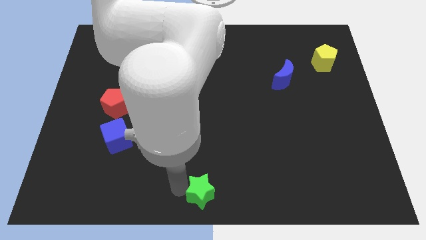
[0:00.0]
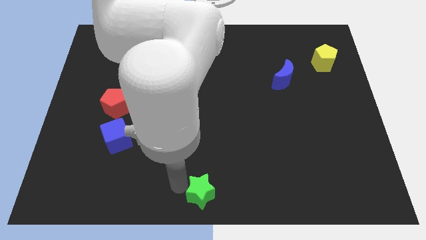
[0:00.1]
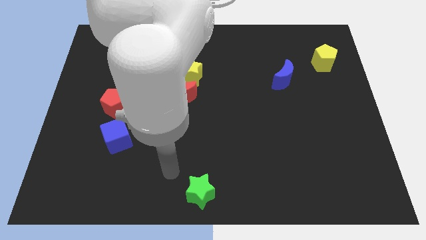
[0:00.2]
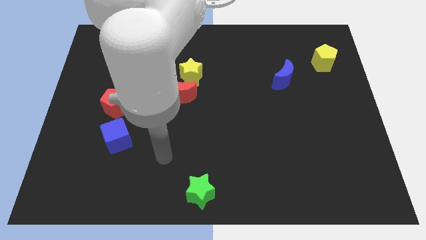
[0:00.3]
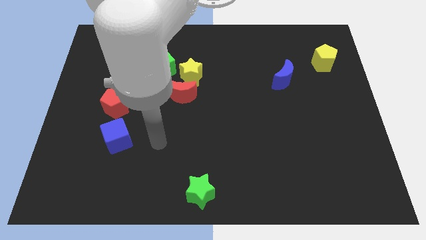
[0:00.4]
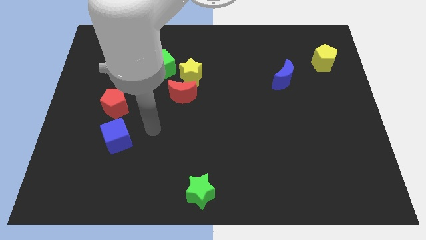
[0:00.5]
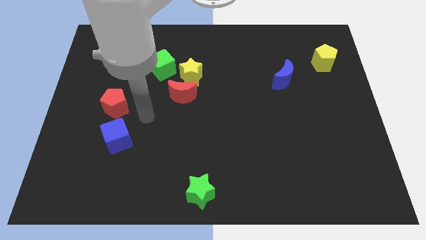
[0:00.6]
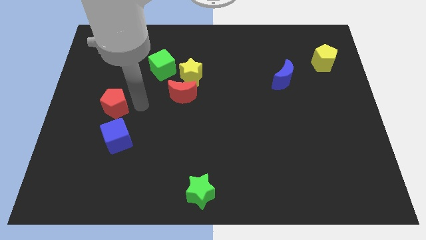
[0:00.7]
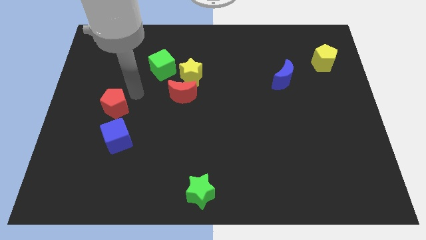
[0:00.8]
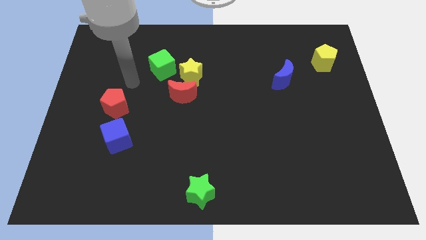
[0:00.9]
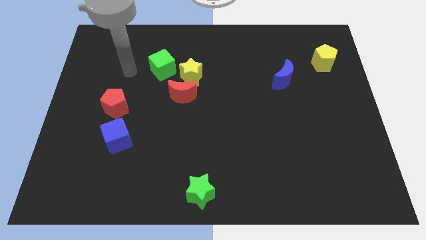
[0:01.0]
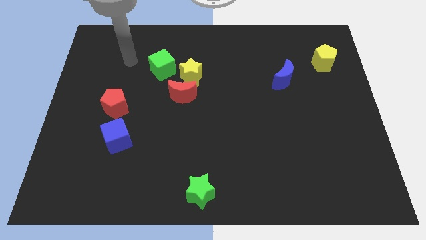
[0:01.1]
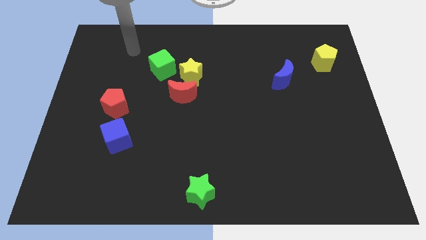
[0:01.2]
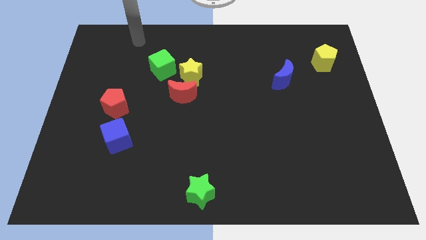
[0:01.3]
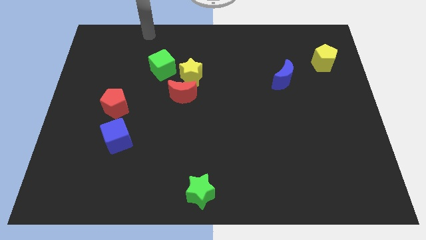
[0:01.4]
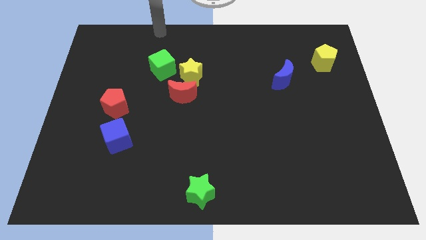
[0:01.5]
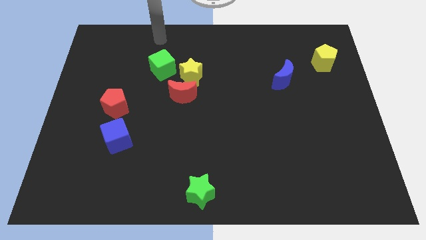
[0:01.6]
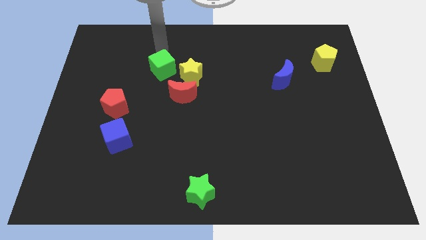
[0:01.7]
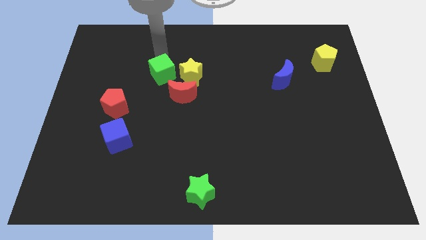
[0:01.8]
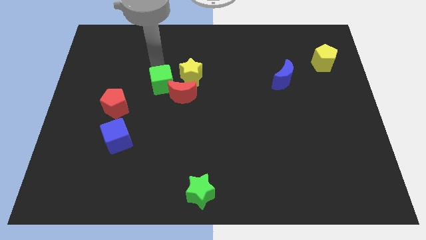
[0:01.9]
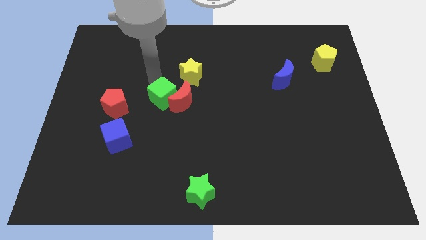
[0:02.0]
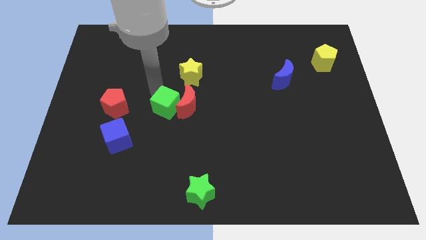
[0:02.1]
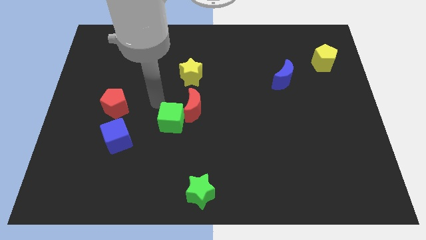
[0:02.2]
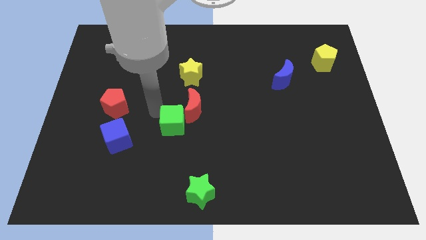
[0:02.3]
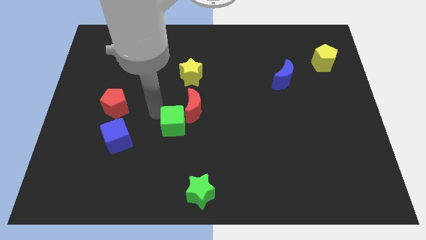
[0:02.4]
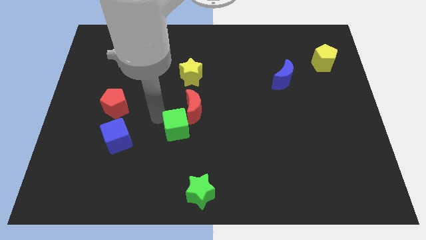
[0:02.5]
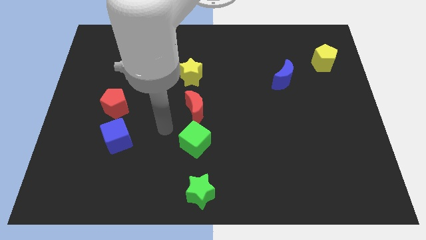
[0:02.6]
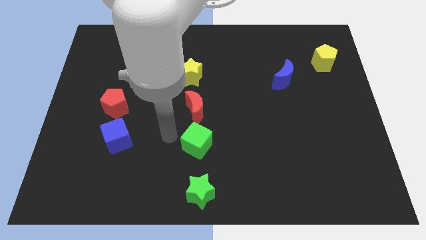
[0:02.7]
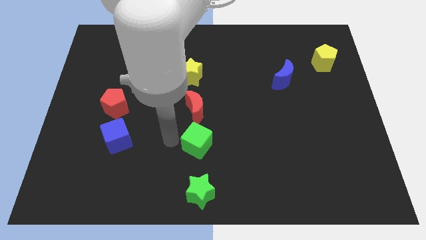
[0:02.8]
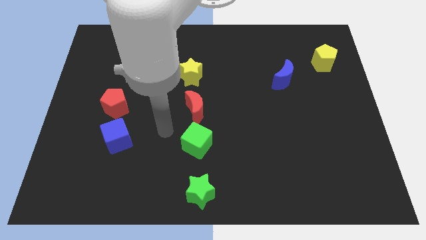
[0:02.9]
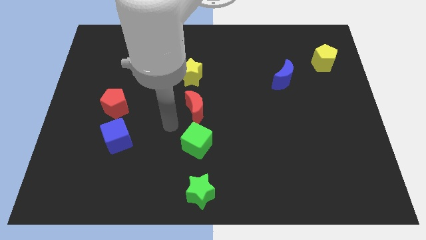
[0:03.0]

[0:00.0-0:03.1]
place the green cube in between the red moon and green star

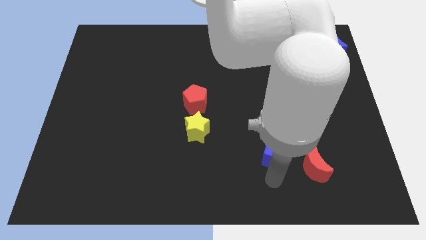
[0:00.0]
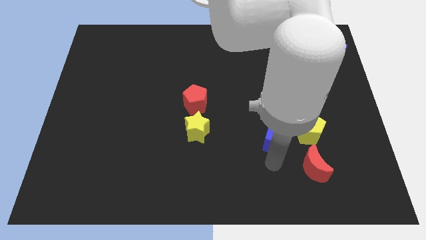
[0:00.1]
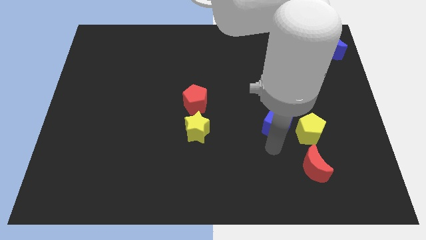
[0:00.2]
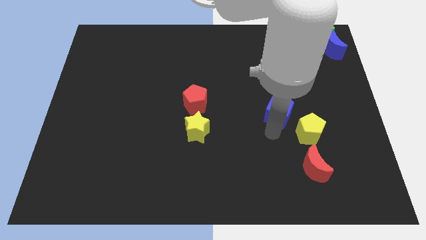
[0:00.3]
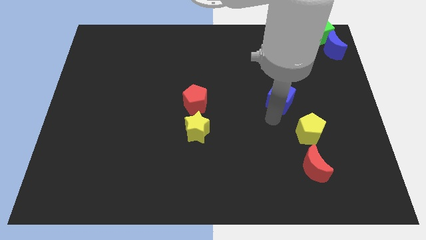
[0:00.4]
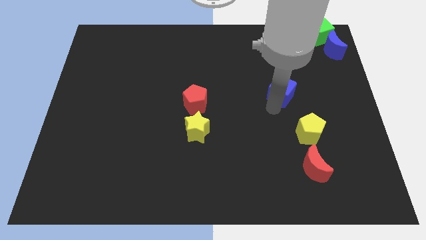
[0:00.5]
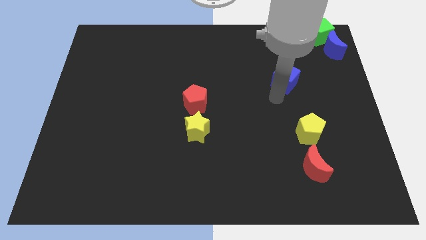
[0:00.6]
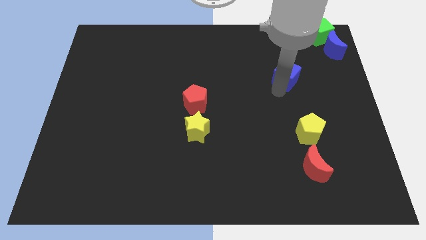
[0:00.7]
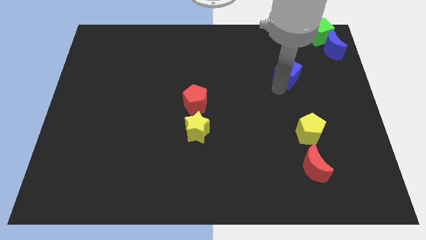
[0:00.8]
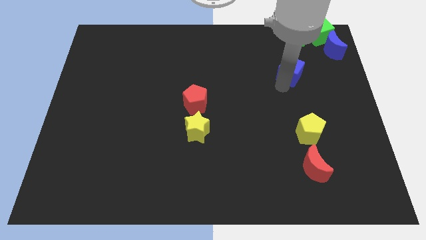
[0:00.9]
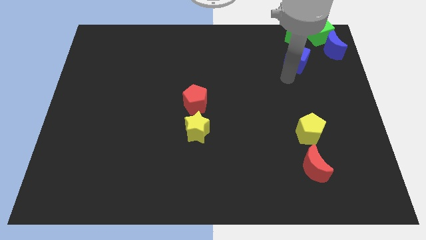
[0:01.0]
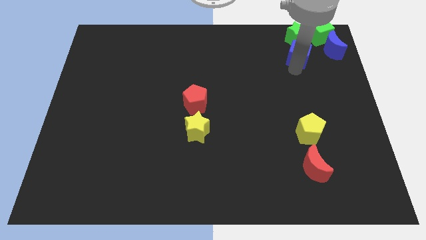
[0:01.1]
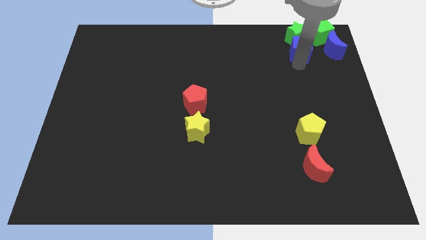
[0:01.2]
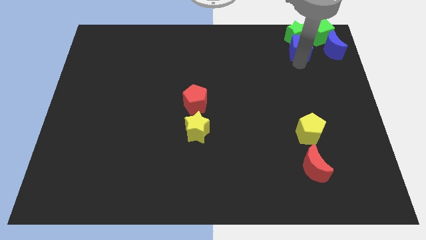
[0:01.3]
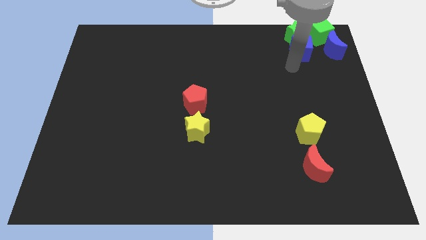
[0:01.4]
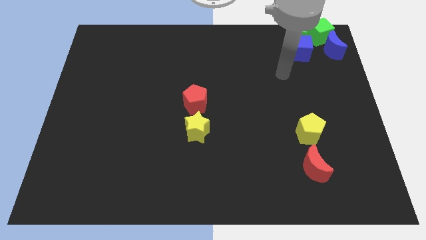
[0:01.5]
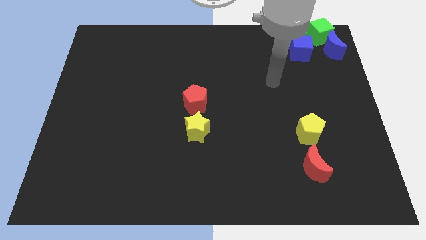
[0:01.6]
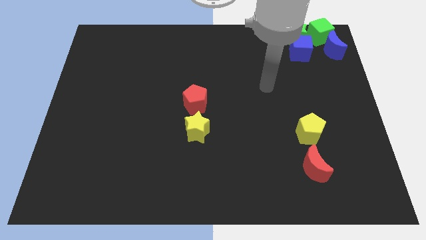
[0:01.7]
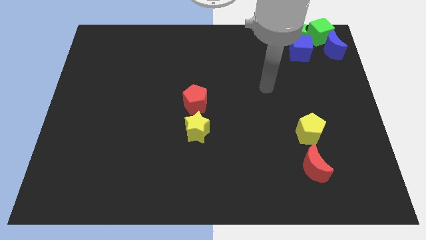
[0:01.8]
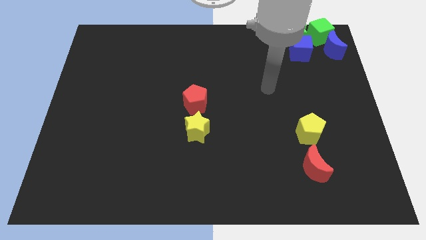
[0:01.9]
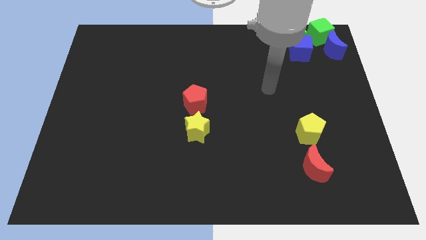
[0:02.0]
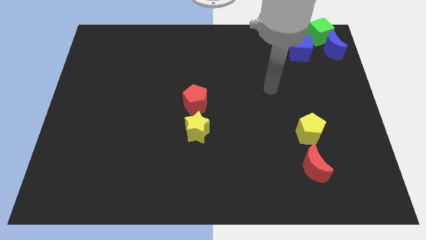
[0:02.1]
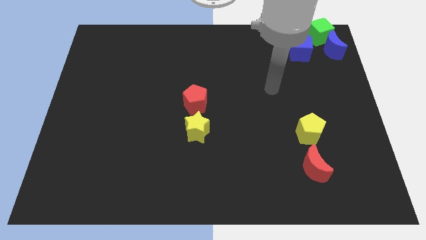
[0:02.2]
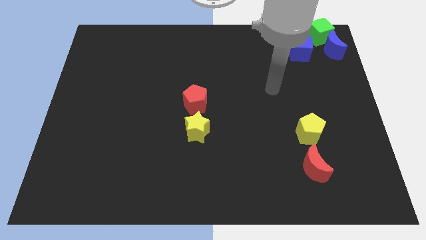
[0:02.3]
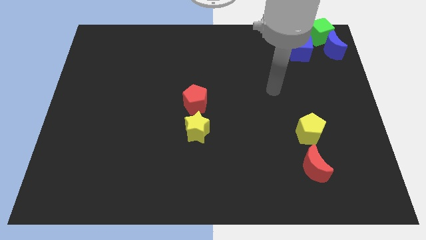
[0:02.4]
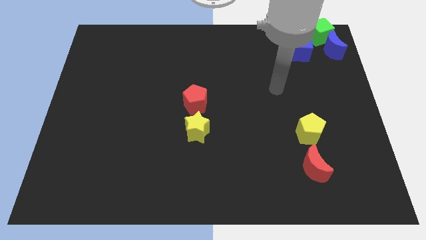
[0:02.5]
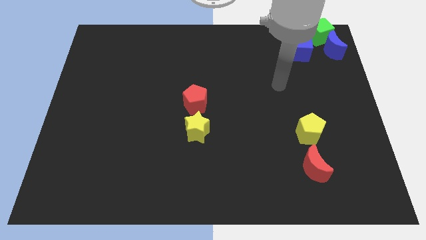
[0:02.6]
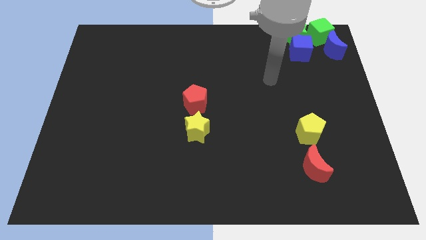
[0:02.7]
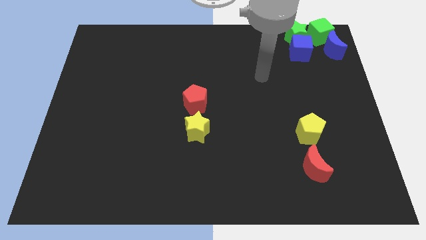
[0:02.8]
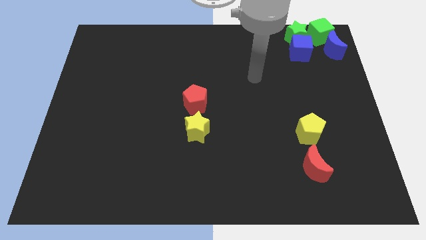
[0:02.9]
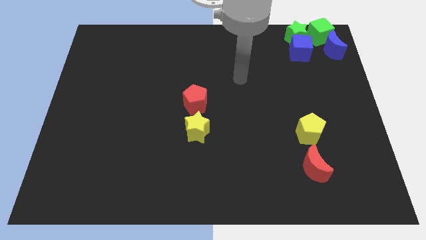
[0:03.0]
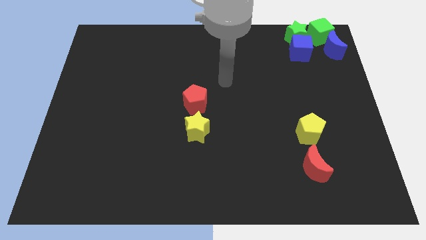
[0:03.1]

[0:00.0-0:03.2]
push the blue cube into the green star

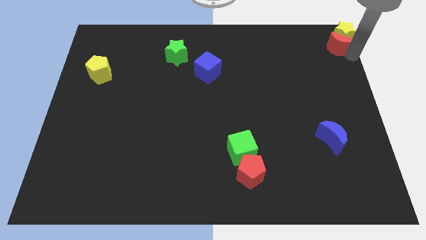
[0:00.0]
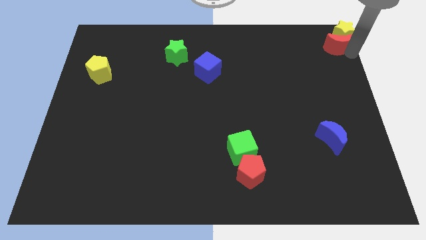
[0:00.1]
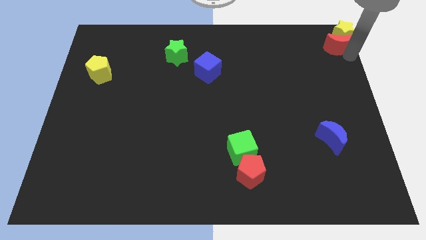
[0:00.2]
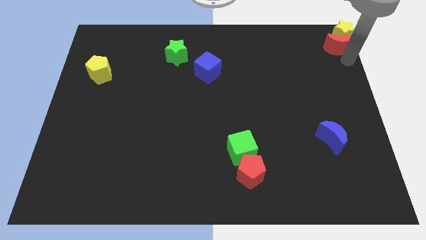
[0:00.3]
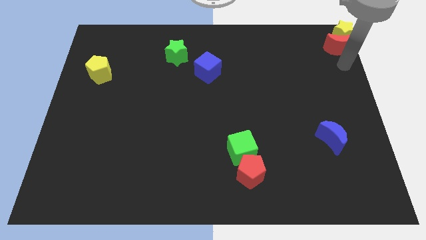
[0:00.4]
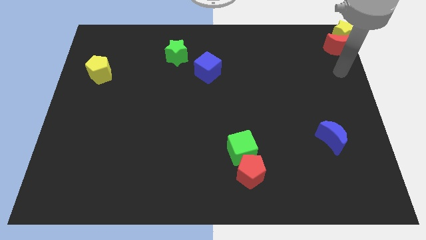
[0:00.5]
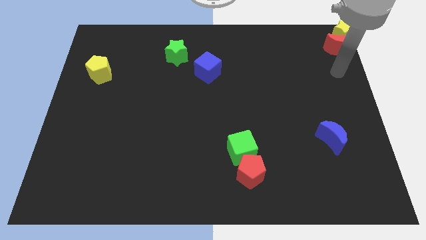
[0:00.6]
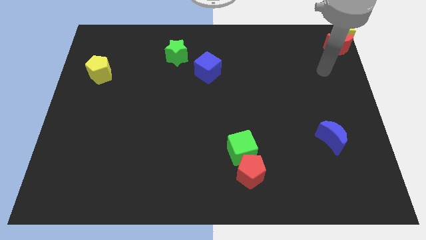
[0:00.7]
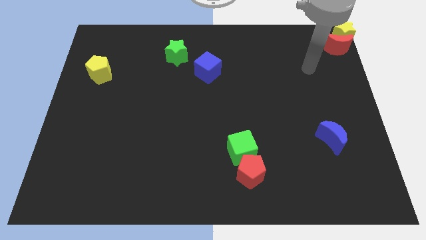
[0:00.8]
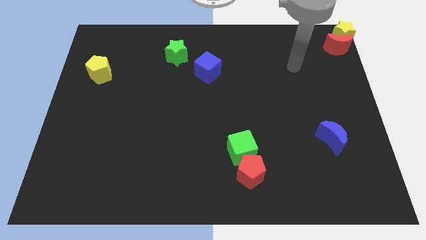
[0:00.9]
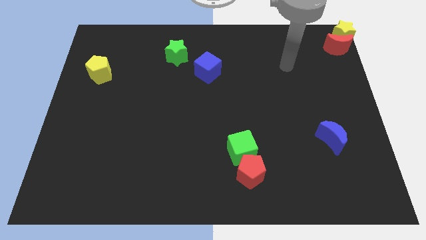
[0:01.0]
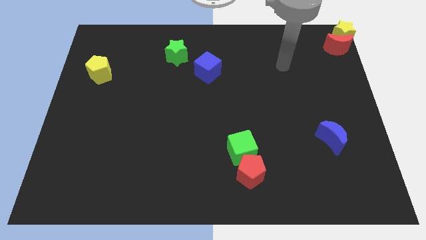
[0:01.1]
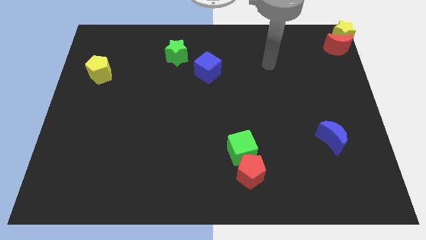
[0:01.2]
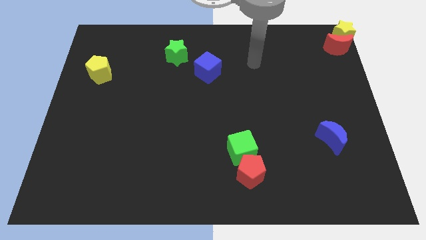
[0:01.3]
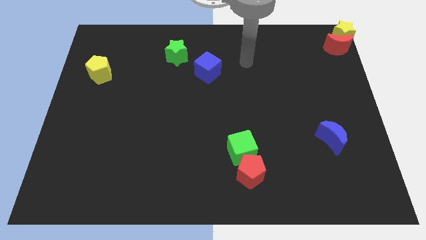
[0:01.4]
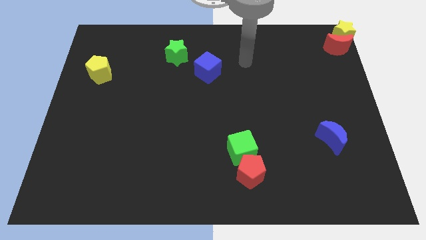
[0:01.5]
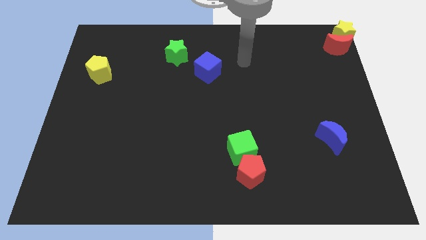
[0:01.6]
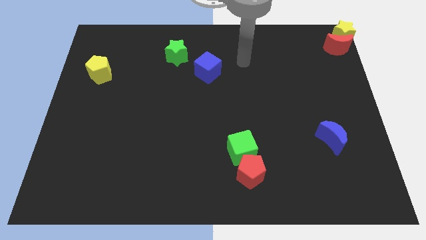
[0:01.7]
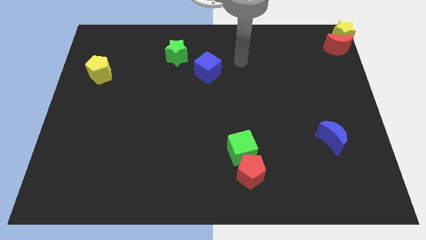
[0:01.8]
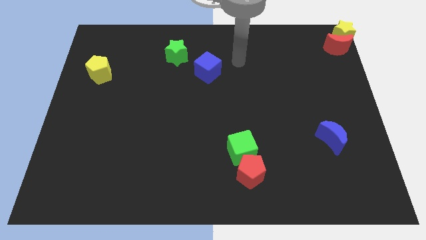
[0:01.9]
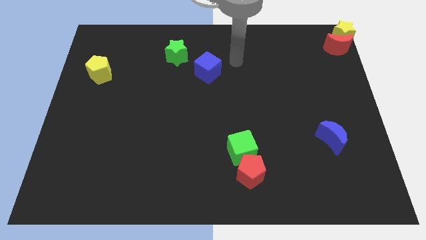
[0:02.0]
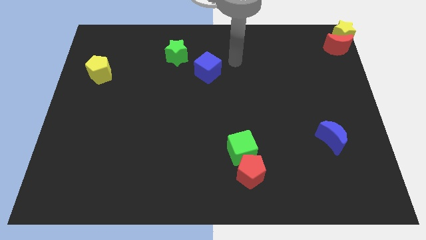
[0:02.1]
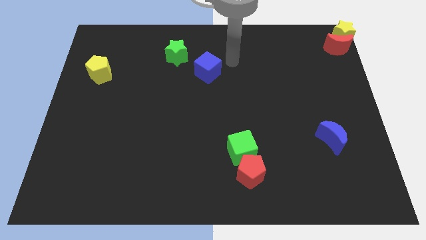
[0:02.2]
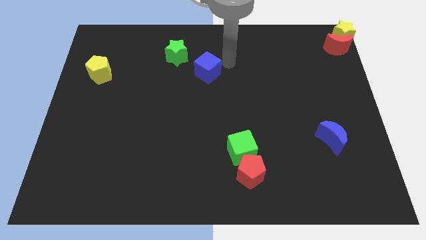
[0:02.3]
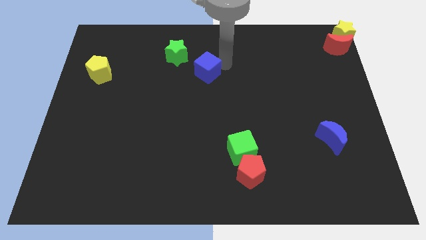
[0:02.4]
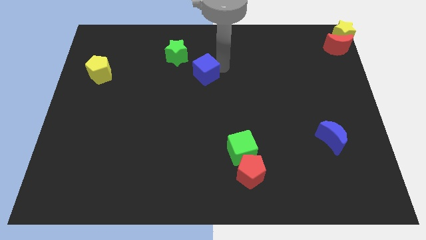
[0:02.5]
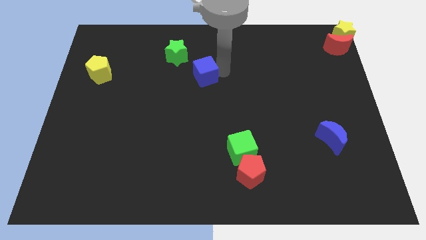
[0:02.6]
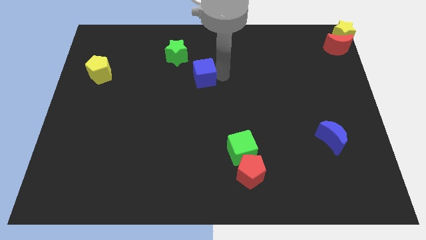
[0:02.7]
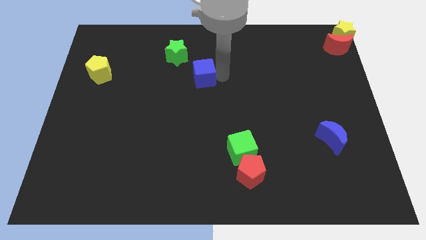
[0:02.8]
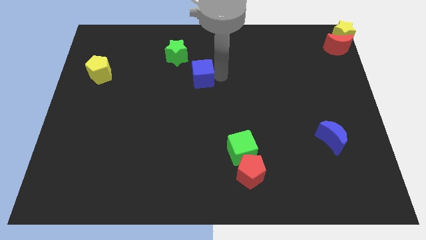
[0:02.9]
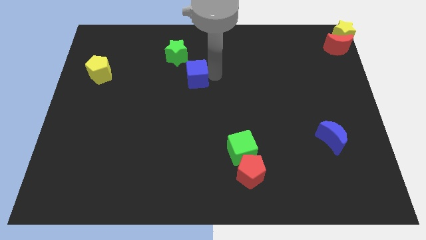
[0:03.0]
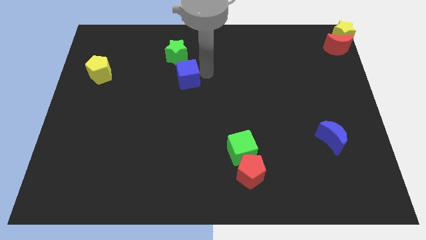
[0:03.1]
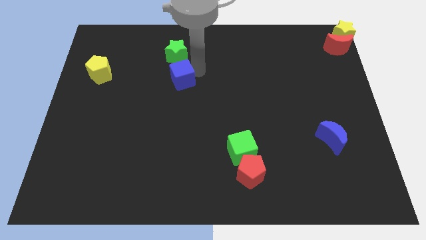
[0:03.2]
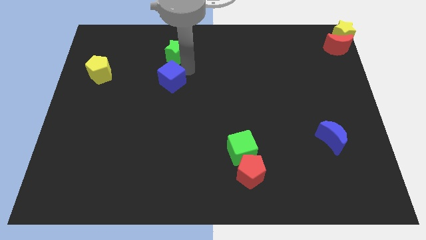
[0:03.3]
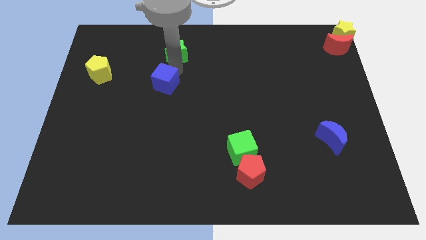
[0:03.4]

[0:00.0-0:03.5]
move the arm away from the red moon
